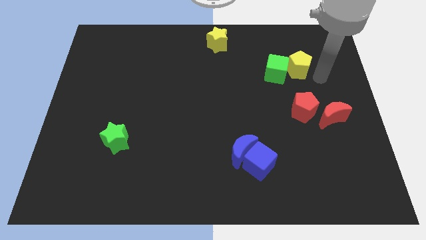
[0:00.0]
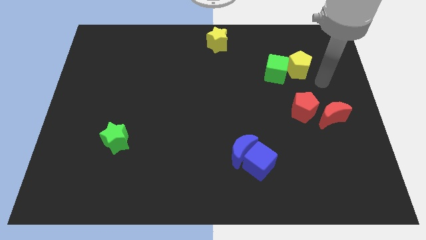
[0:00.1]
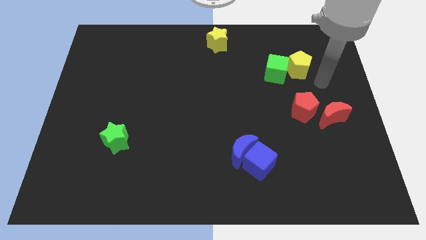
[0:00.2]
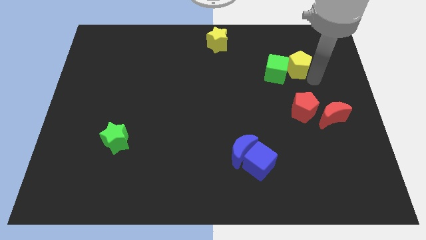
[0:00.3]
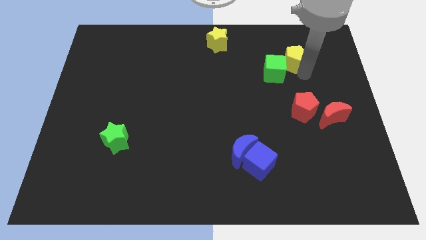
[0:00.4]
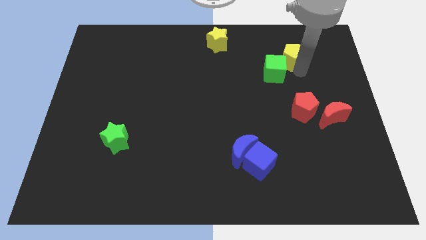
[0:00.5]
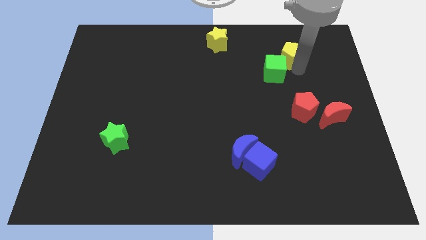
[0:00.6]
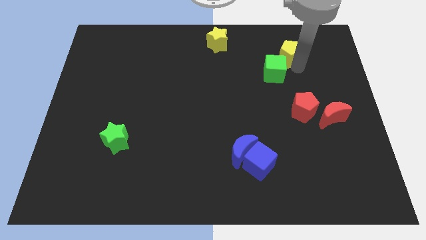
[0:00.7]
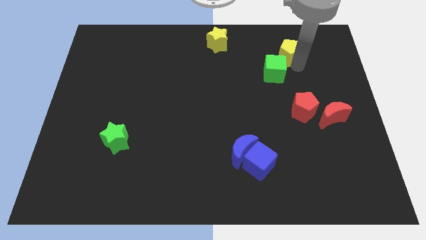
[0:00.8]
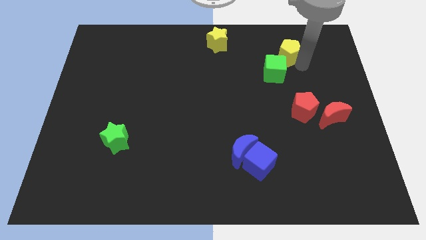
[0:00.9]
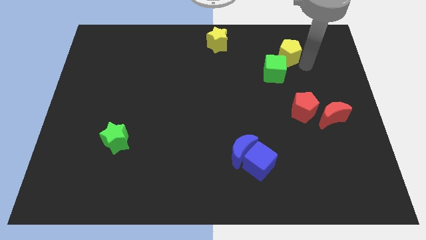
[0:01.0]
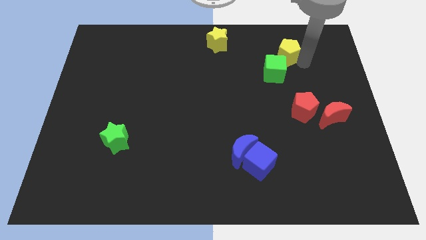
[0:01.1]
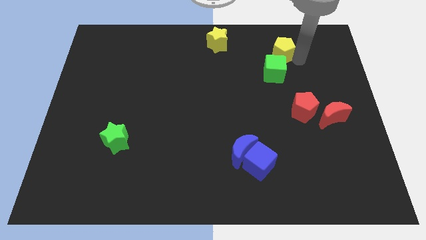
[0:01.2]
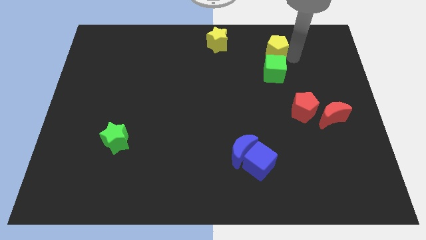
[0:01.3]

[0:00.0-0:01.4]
separate yellow pentagon from green cube

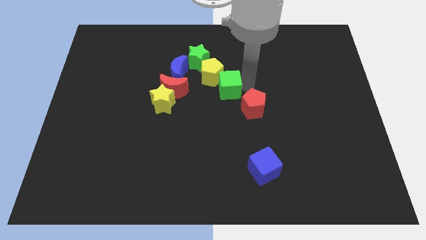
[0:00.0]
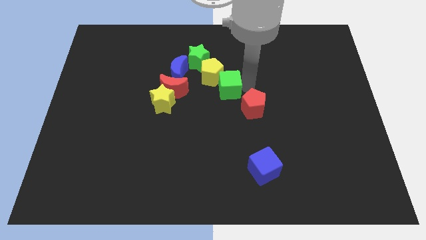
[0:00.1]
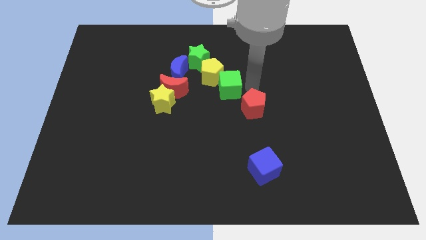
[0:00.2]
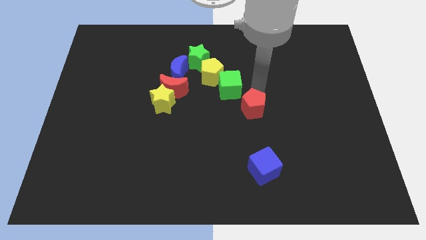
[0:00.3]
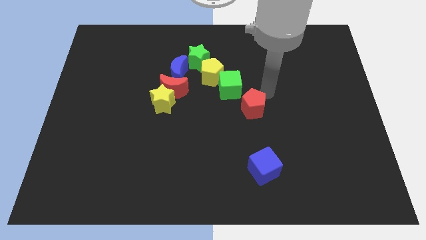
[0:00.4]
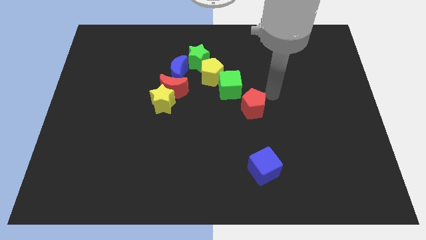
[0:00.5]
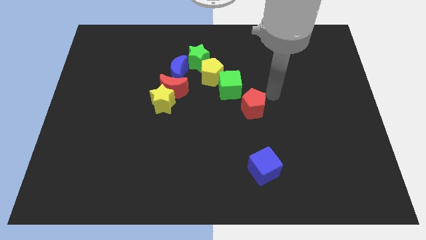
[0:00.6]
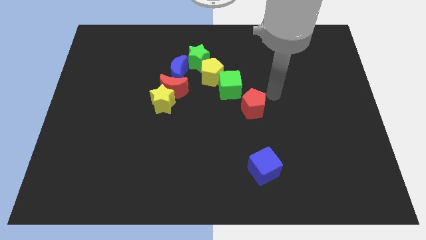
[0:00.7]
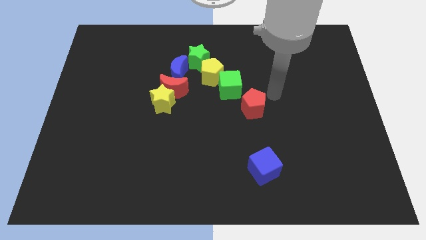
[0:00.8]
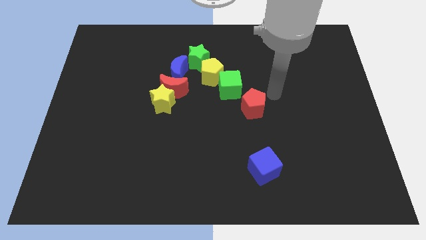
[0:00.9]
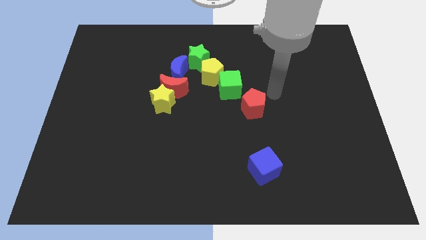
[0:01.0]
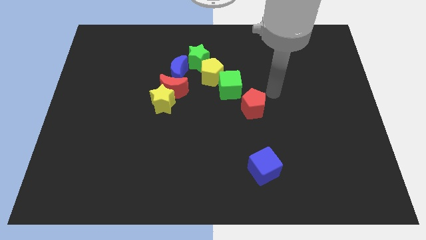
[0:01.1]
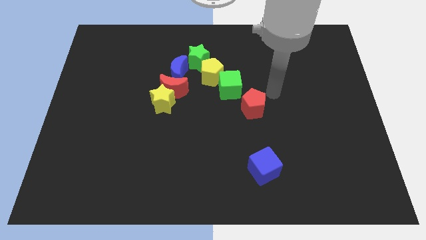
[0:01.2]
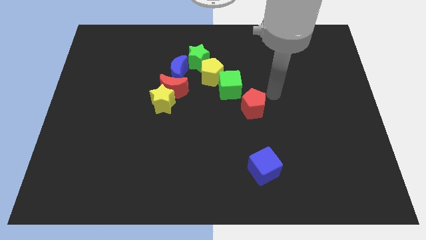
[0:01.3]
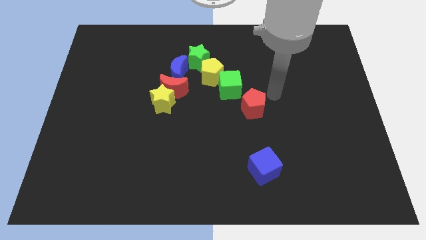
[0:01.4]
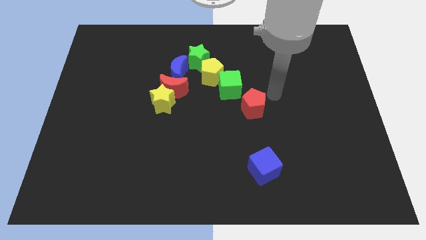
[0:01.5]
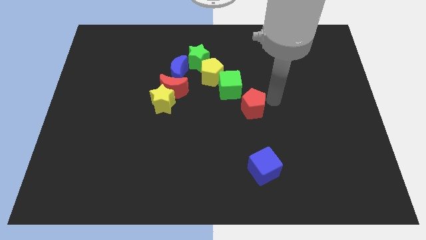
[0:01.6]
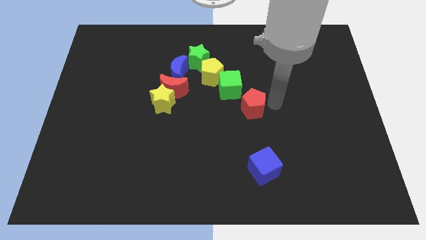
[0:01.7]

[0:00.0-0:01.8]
move the arm at the right side of the red pentagon

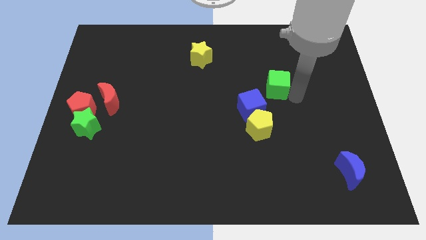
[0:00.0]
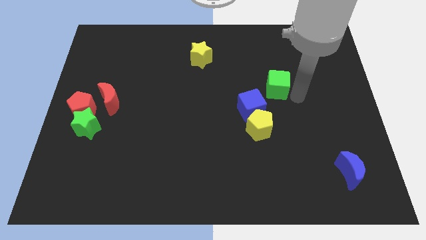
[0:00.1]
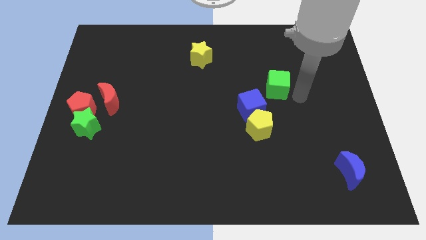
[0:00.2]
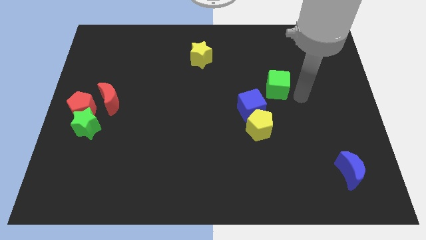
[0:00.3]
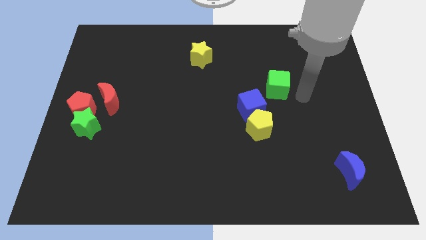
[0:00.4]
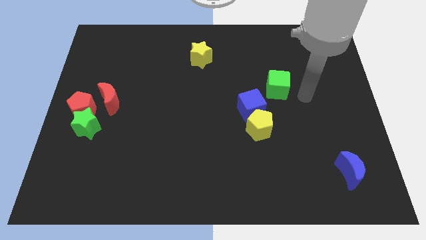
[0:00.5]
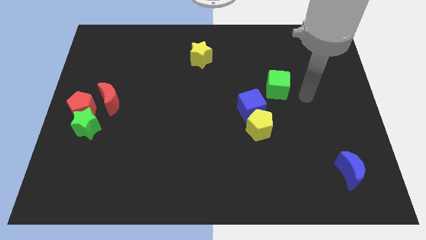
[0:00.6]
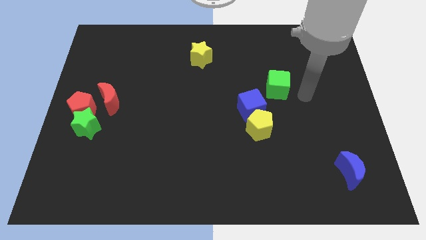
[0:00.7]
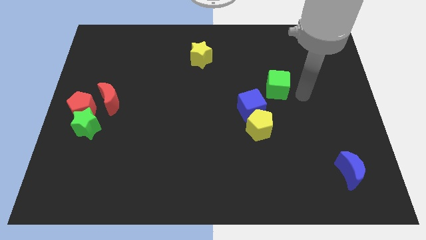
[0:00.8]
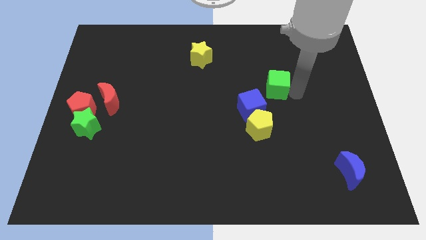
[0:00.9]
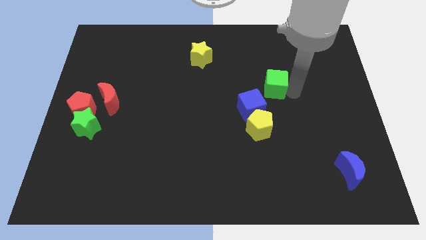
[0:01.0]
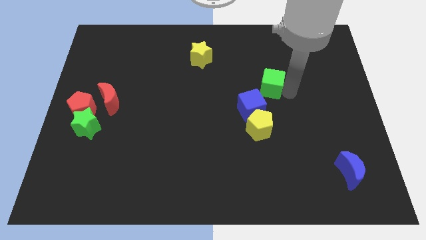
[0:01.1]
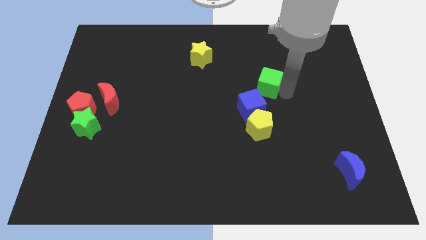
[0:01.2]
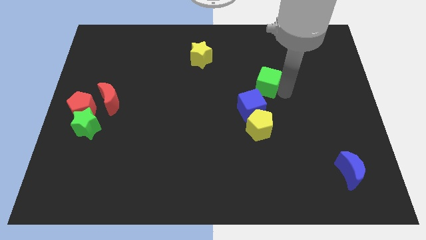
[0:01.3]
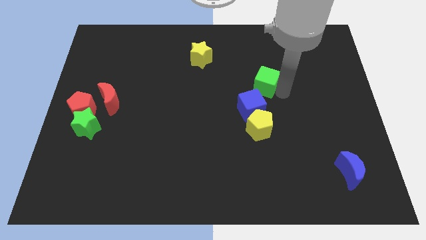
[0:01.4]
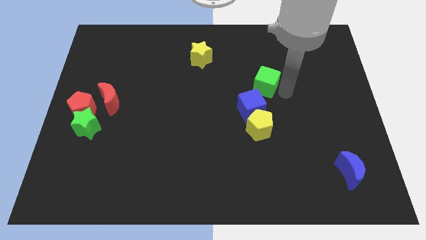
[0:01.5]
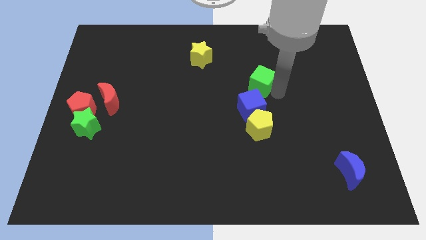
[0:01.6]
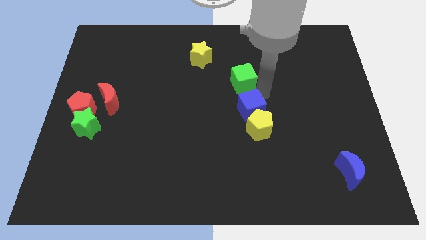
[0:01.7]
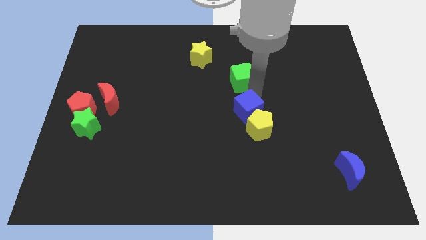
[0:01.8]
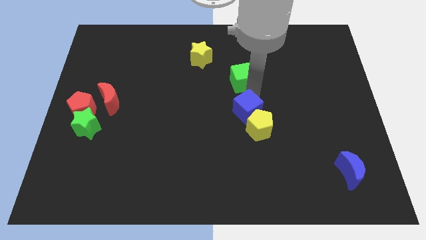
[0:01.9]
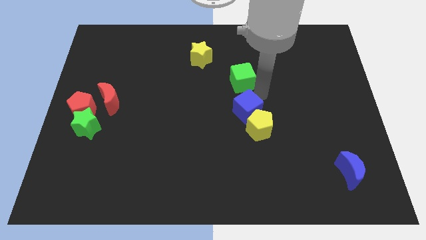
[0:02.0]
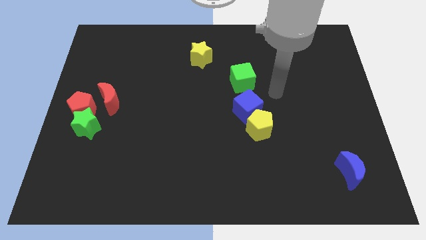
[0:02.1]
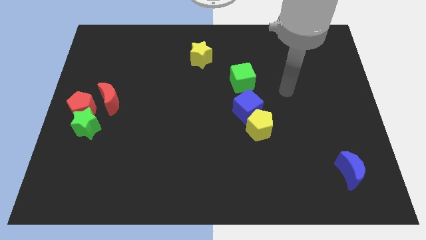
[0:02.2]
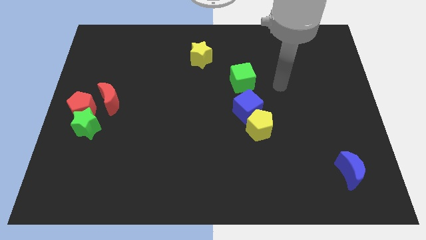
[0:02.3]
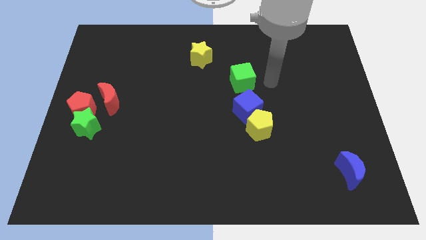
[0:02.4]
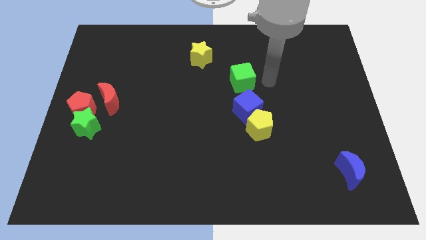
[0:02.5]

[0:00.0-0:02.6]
push green cube above blue cube

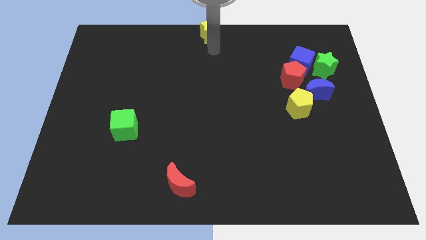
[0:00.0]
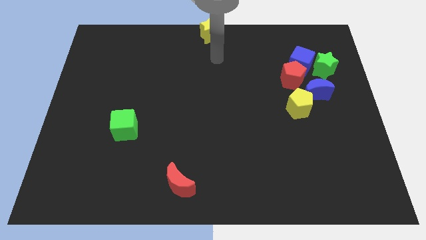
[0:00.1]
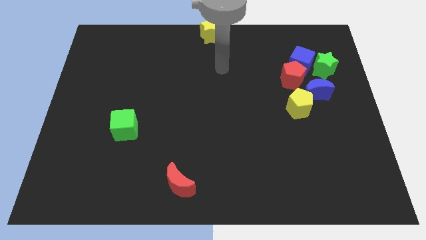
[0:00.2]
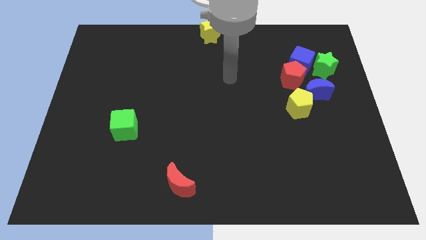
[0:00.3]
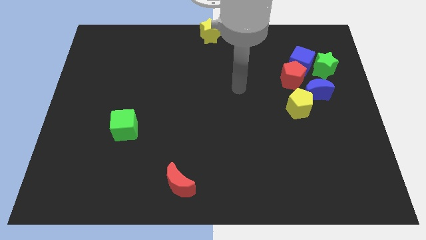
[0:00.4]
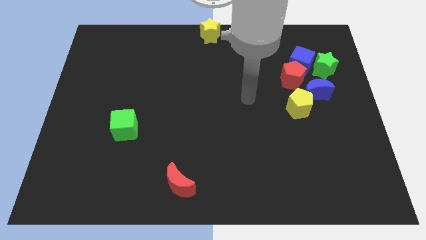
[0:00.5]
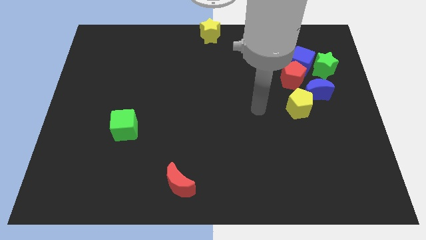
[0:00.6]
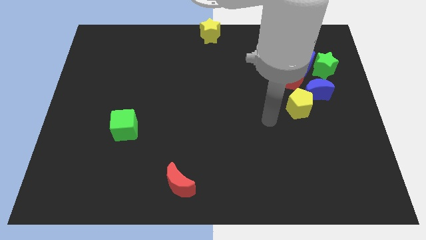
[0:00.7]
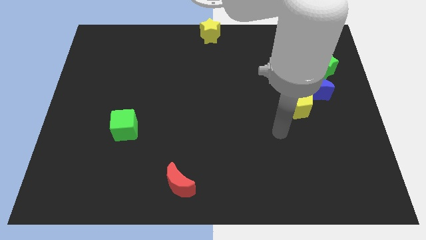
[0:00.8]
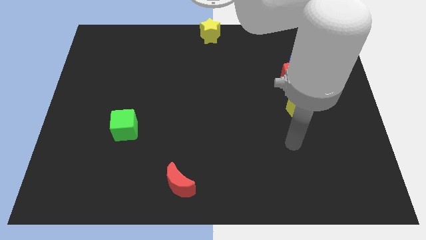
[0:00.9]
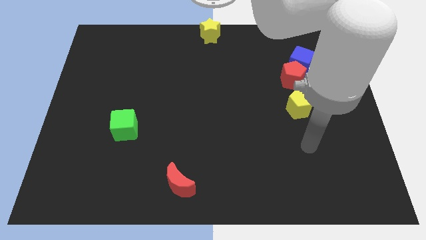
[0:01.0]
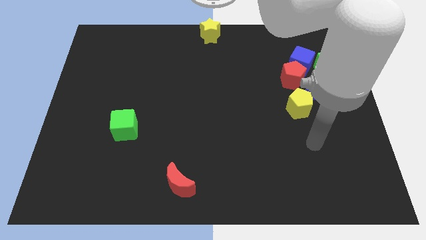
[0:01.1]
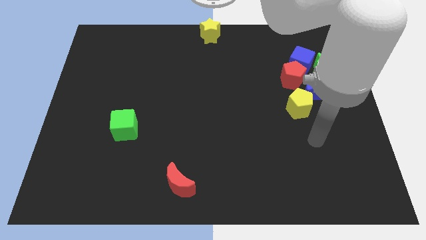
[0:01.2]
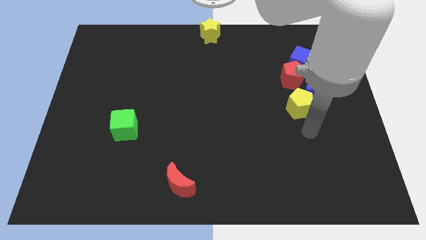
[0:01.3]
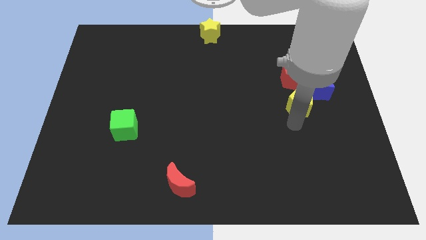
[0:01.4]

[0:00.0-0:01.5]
point your arm at the bottom of yellow pentagon

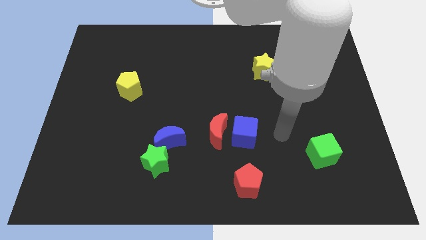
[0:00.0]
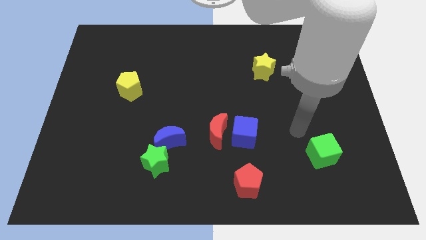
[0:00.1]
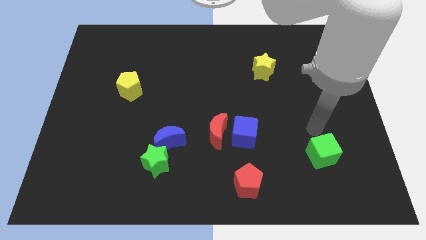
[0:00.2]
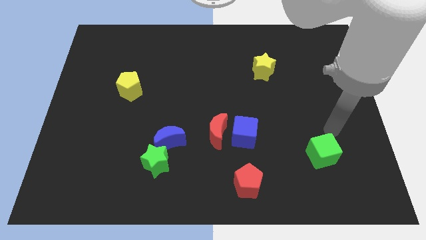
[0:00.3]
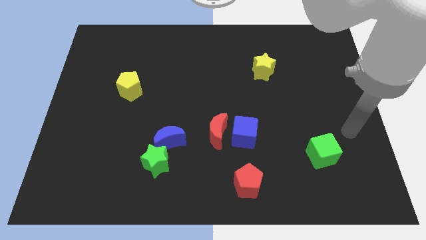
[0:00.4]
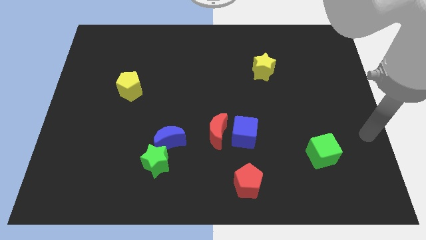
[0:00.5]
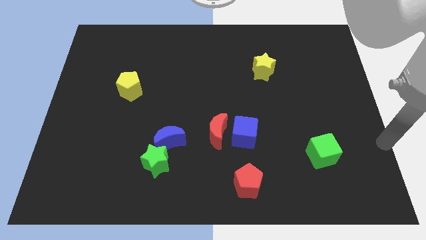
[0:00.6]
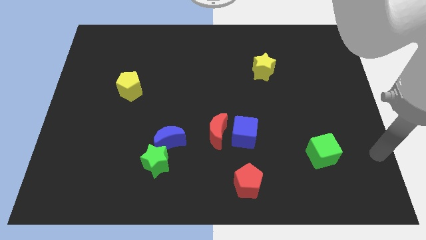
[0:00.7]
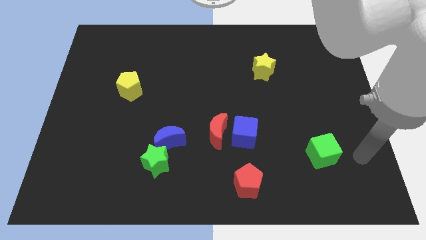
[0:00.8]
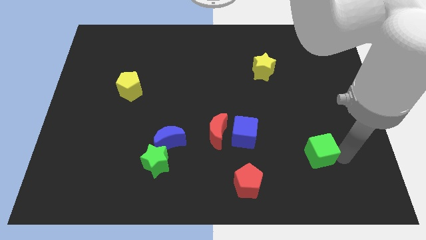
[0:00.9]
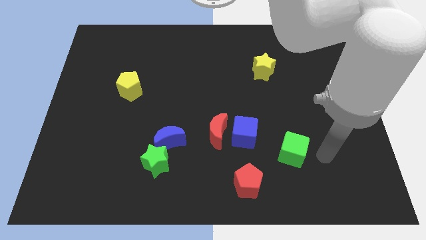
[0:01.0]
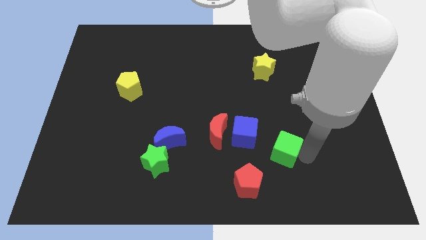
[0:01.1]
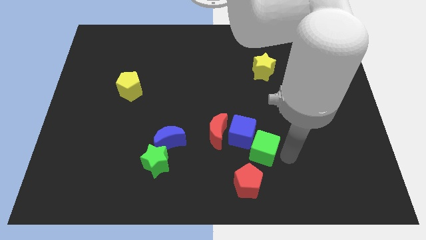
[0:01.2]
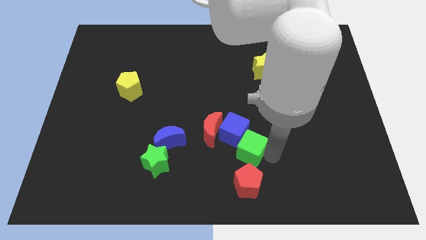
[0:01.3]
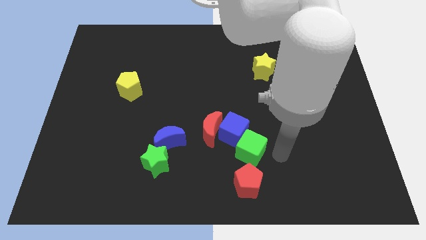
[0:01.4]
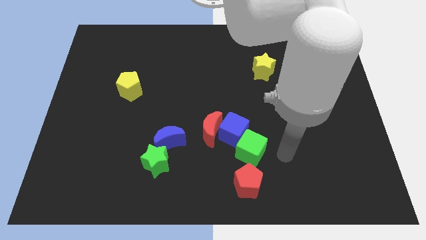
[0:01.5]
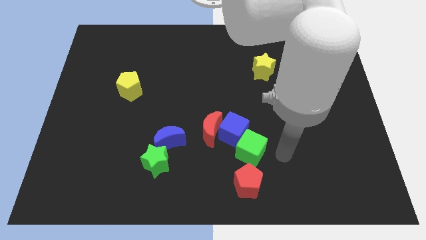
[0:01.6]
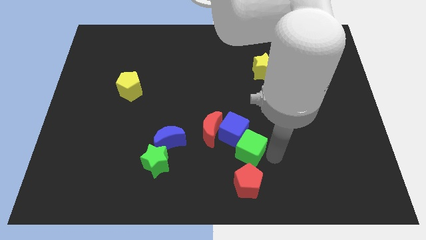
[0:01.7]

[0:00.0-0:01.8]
push the green cube into the blue cube

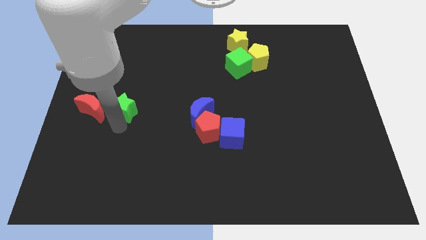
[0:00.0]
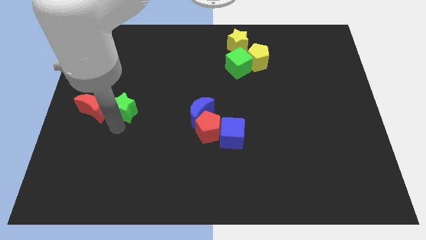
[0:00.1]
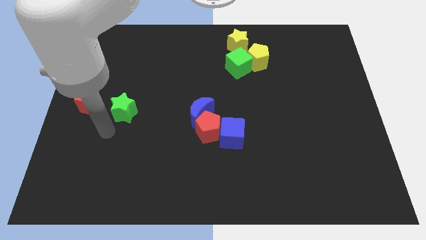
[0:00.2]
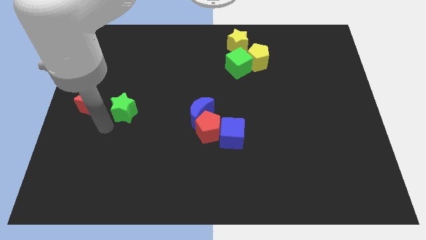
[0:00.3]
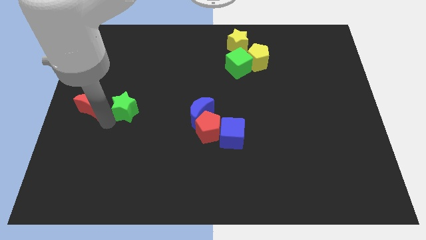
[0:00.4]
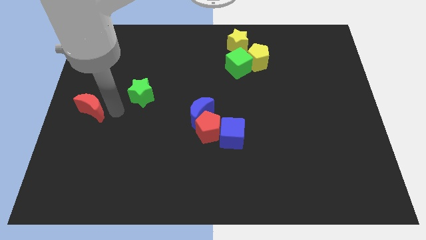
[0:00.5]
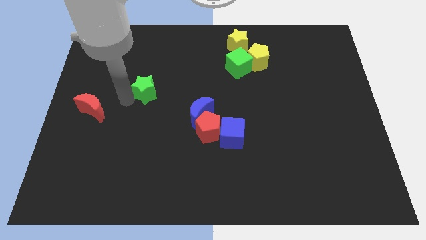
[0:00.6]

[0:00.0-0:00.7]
push the green star to the right side of the red crescent